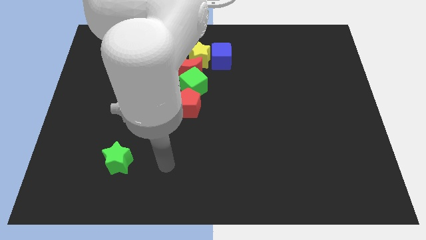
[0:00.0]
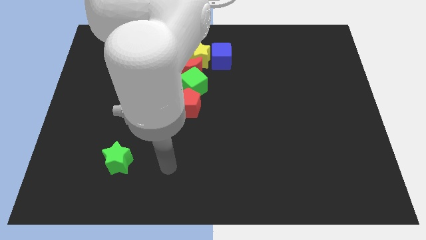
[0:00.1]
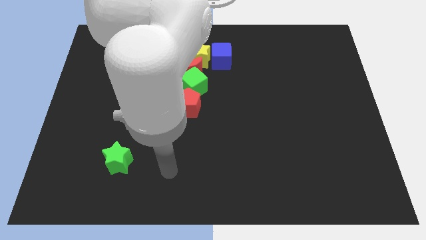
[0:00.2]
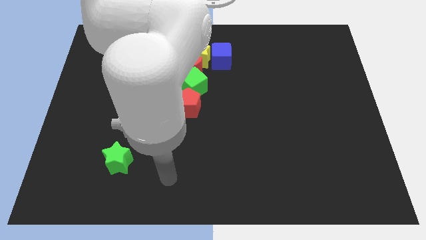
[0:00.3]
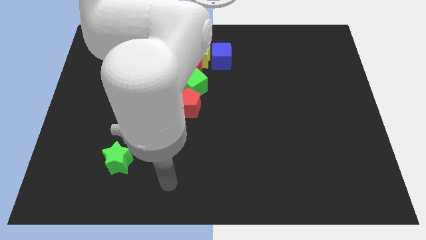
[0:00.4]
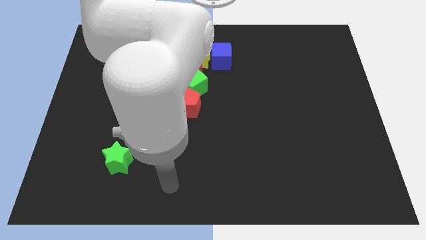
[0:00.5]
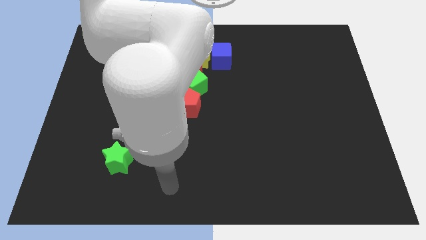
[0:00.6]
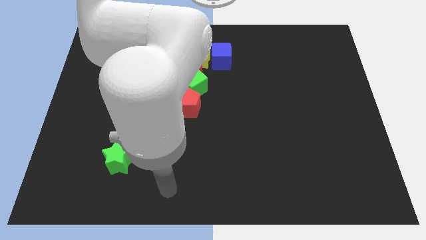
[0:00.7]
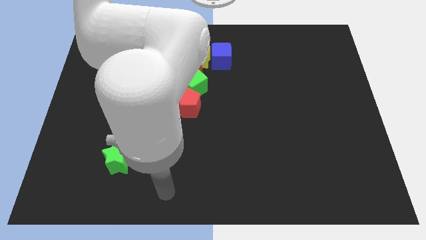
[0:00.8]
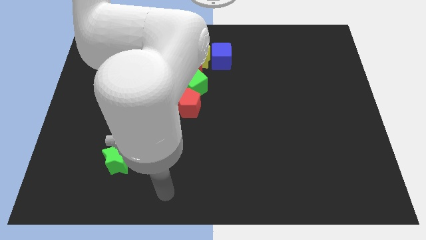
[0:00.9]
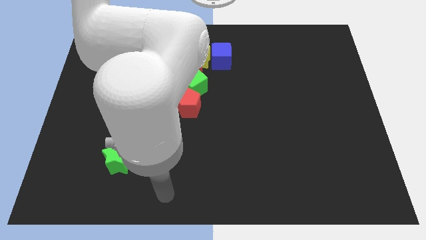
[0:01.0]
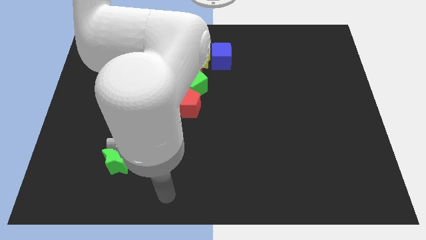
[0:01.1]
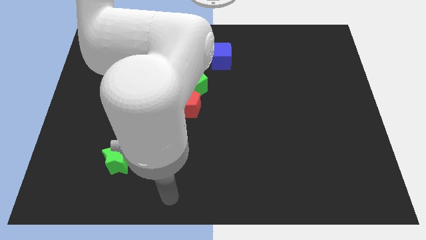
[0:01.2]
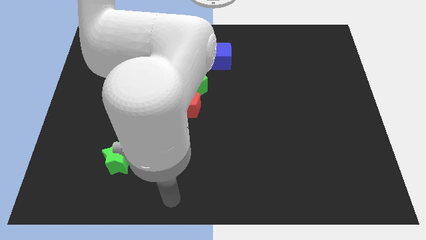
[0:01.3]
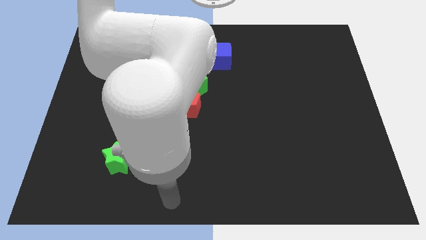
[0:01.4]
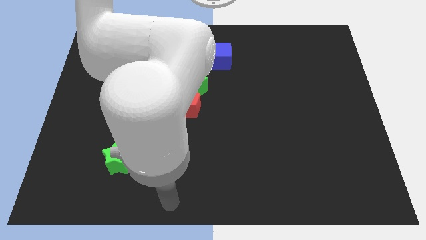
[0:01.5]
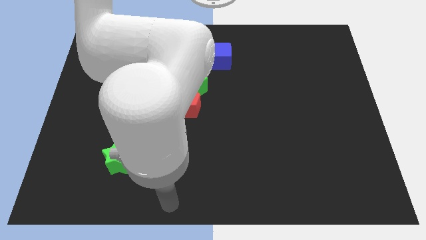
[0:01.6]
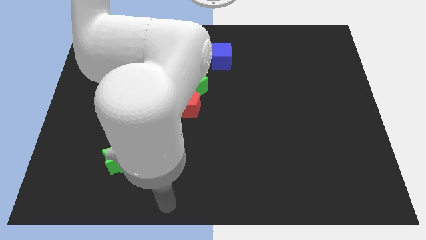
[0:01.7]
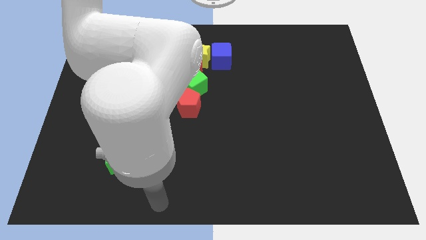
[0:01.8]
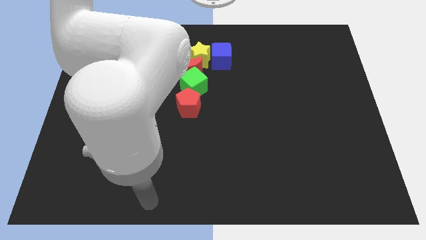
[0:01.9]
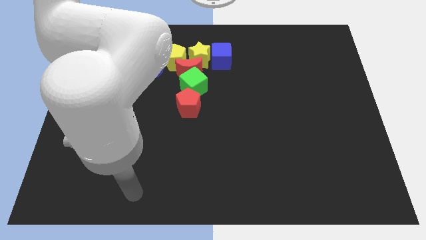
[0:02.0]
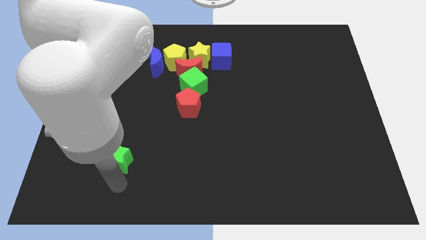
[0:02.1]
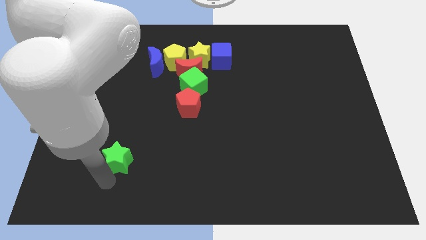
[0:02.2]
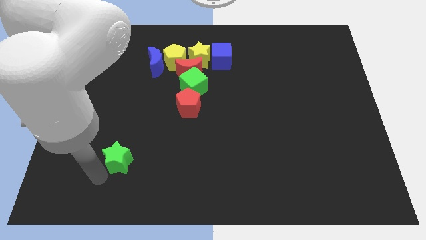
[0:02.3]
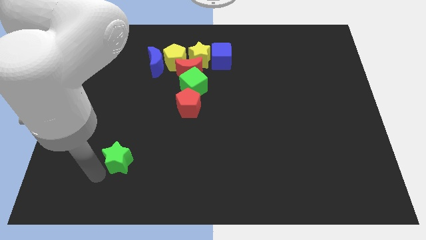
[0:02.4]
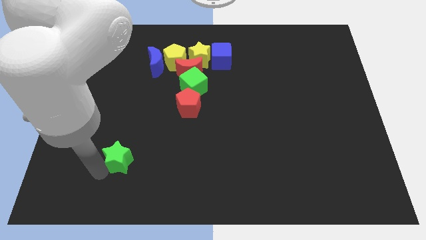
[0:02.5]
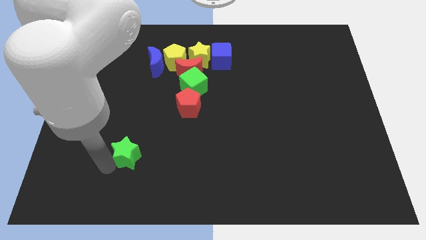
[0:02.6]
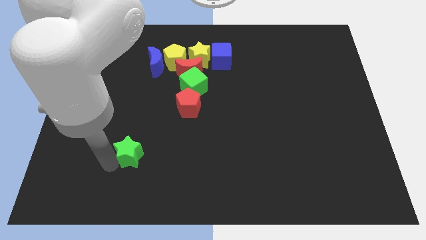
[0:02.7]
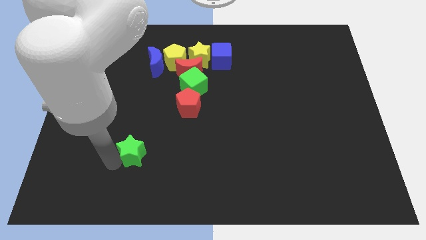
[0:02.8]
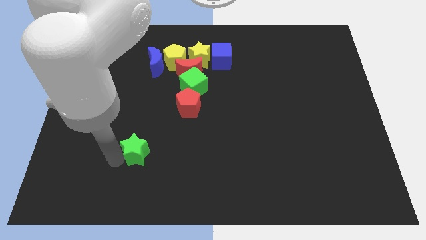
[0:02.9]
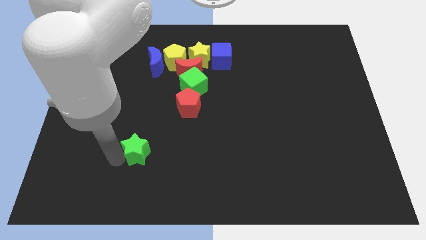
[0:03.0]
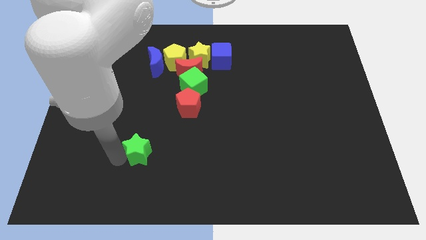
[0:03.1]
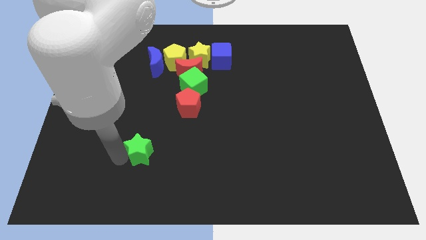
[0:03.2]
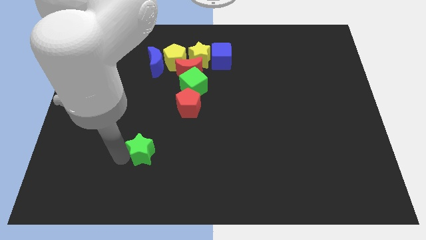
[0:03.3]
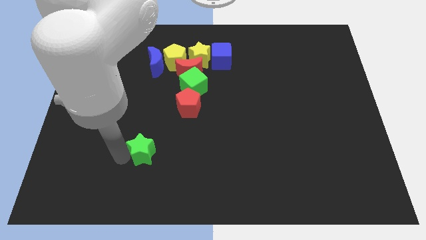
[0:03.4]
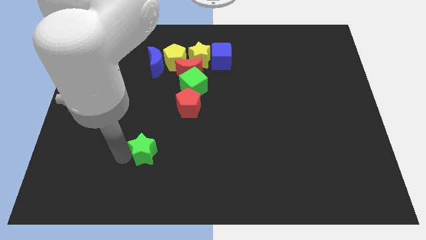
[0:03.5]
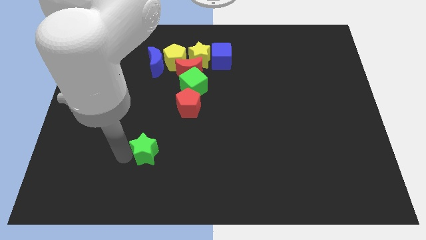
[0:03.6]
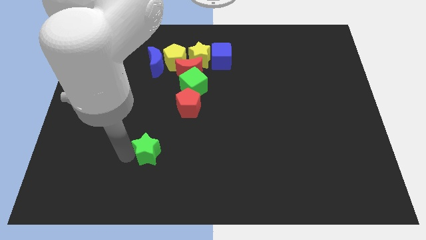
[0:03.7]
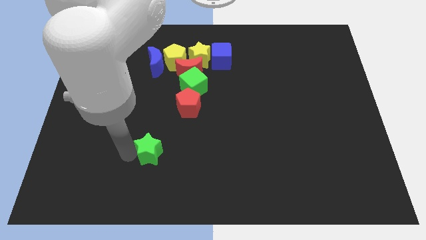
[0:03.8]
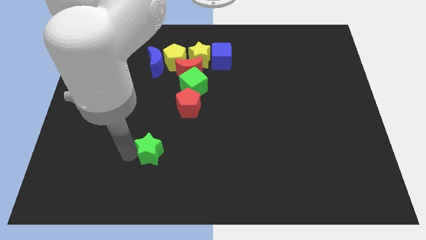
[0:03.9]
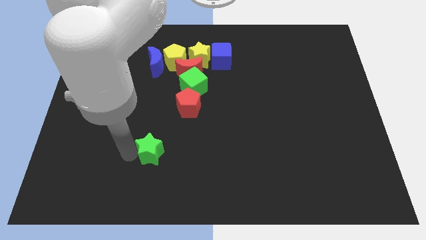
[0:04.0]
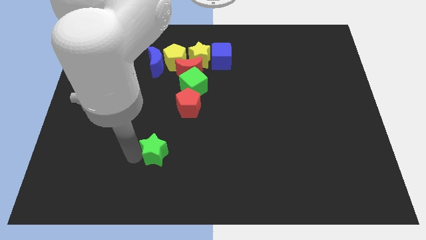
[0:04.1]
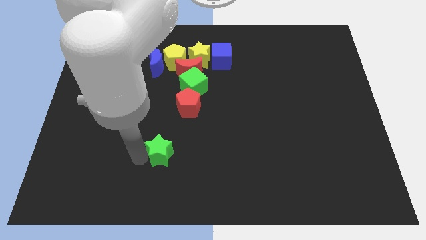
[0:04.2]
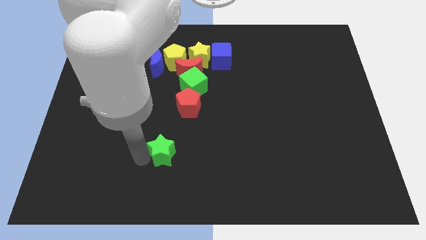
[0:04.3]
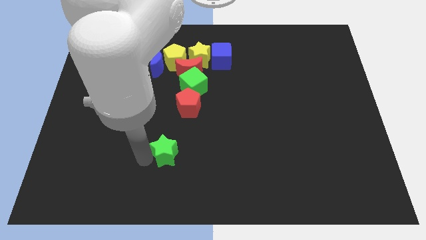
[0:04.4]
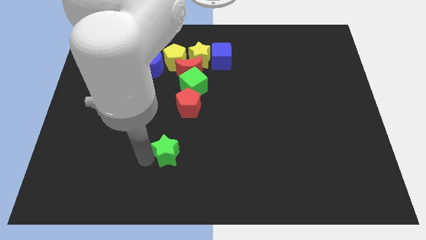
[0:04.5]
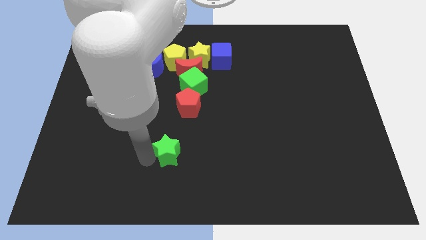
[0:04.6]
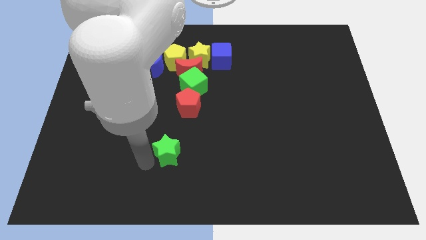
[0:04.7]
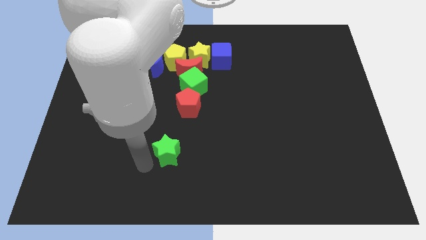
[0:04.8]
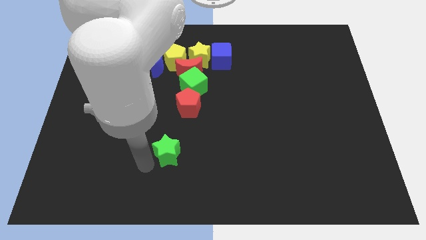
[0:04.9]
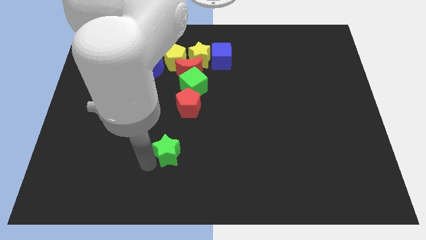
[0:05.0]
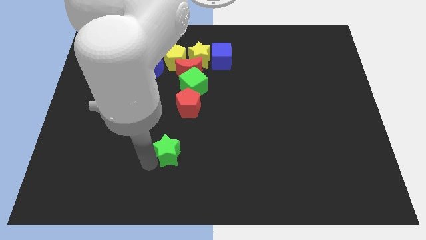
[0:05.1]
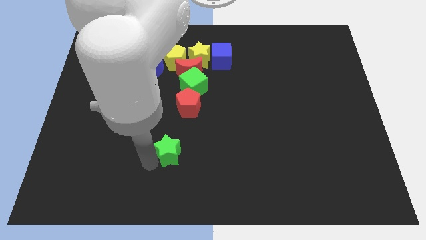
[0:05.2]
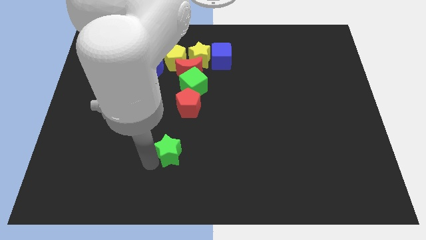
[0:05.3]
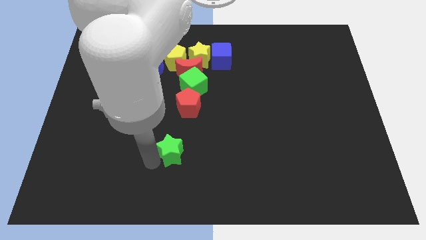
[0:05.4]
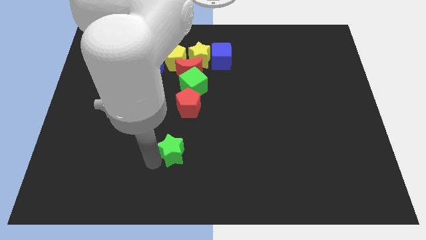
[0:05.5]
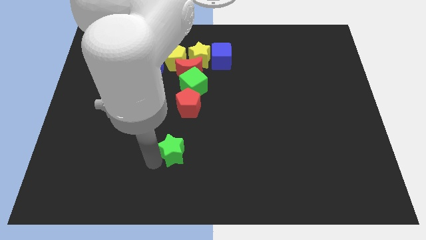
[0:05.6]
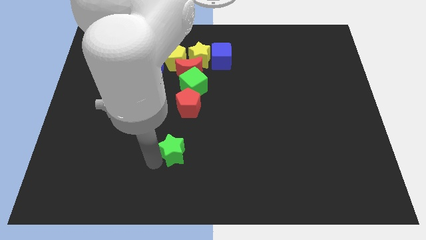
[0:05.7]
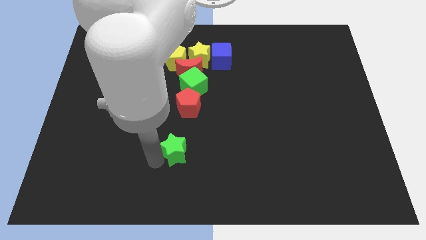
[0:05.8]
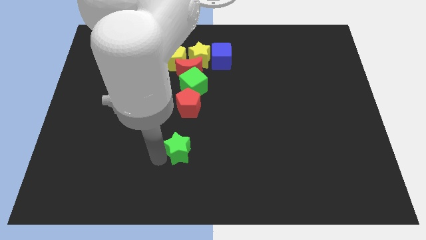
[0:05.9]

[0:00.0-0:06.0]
place the green star below the red pentagon

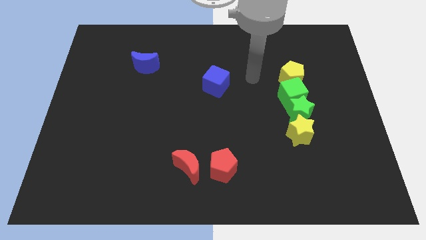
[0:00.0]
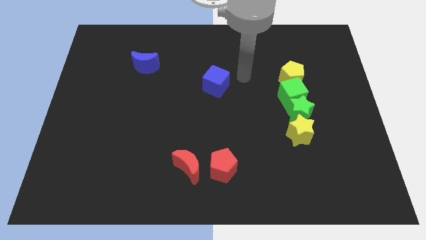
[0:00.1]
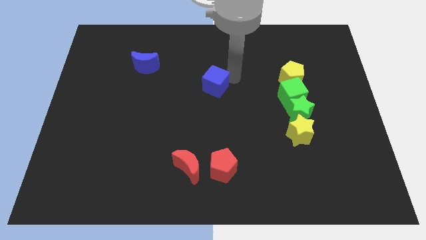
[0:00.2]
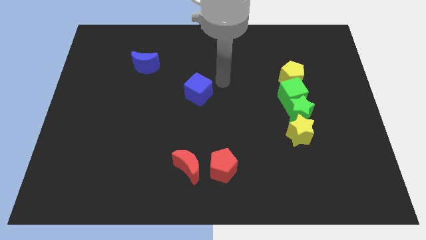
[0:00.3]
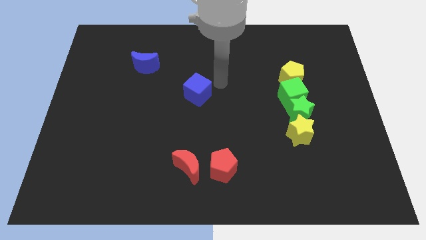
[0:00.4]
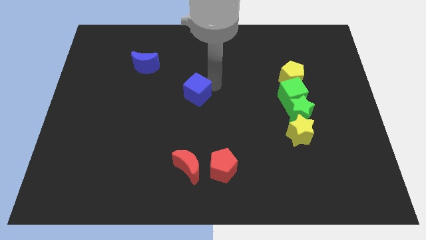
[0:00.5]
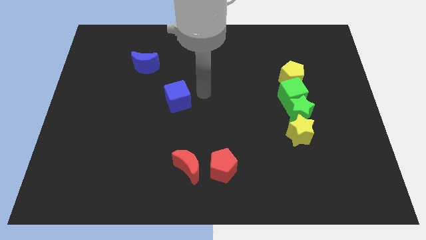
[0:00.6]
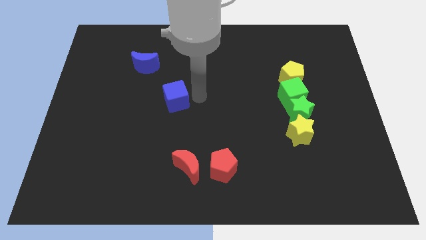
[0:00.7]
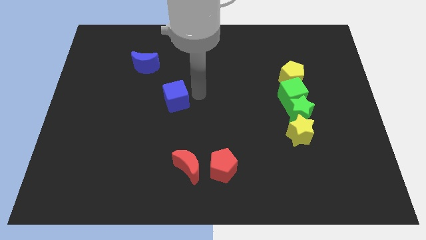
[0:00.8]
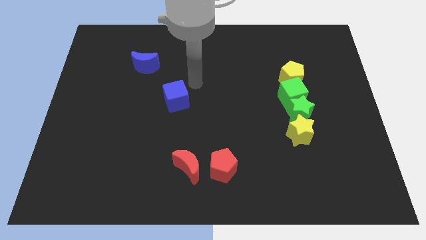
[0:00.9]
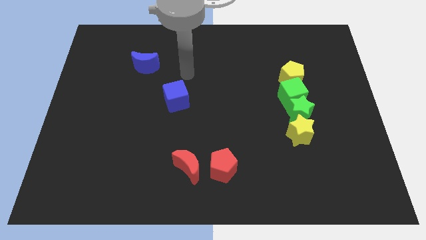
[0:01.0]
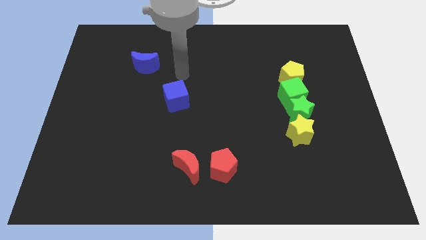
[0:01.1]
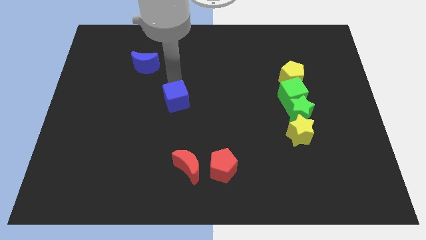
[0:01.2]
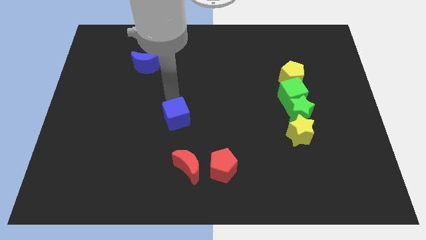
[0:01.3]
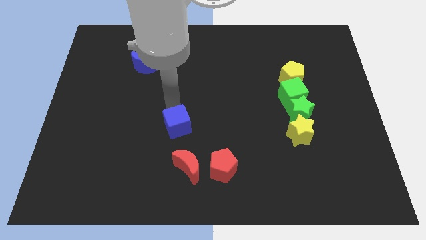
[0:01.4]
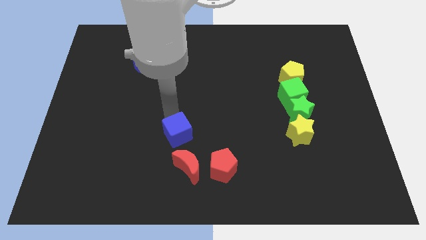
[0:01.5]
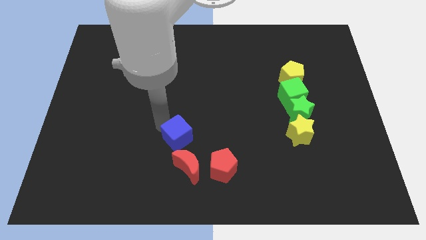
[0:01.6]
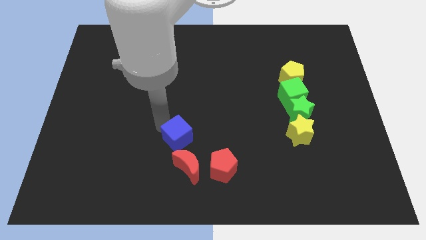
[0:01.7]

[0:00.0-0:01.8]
move the blue cube towards the top side of the red crescent

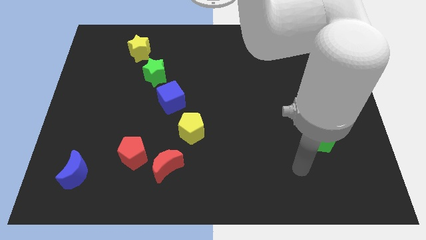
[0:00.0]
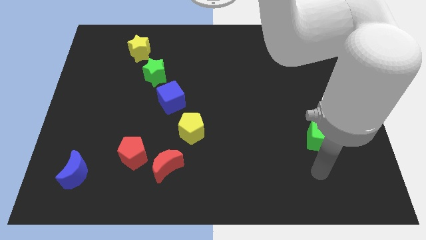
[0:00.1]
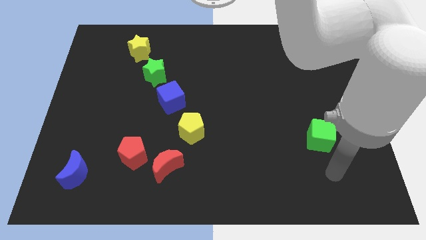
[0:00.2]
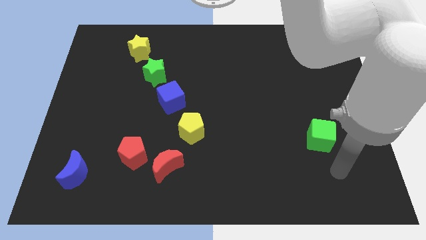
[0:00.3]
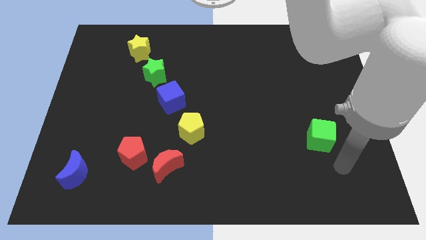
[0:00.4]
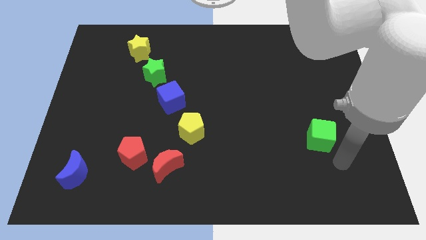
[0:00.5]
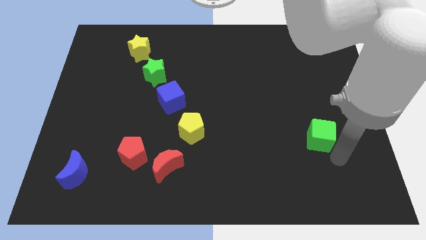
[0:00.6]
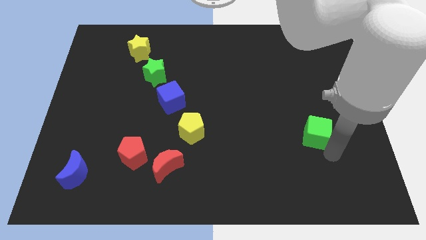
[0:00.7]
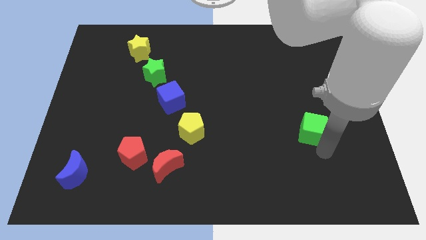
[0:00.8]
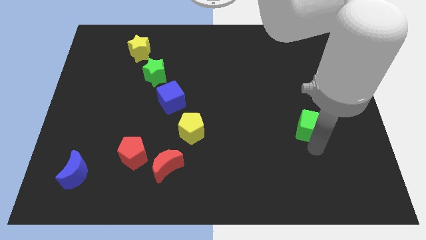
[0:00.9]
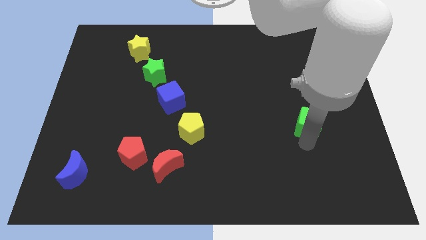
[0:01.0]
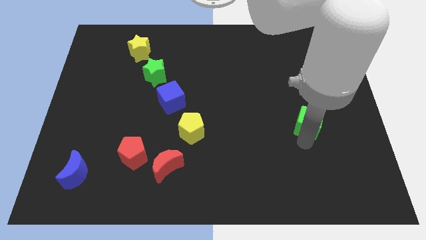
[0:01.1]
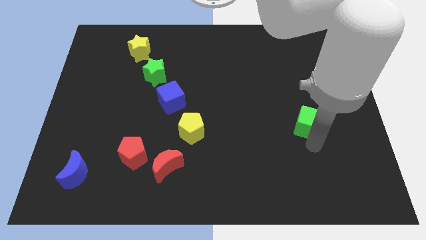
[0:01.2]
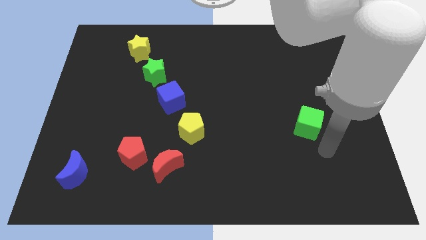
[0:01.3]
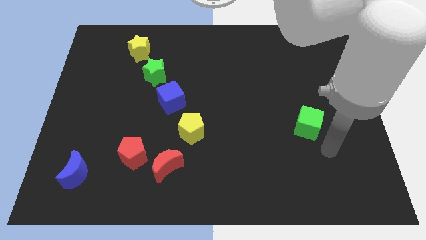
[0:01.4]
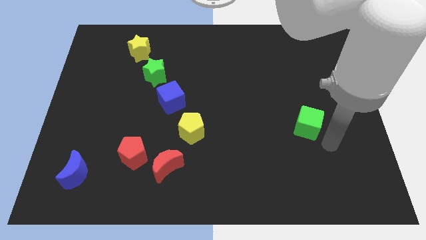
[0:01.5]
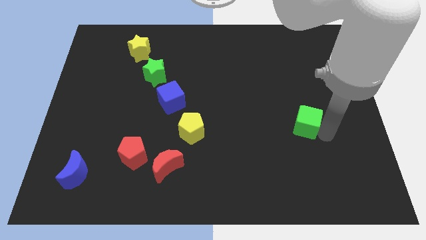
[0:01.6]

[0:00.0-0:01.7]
move the green cube slightly upwards
